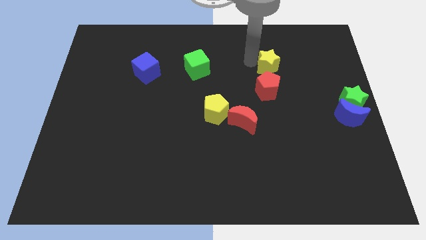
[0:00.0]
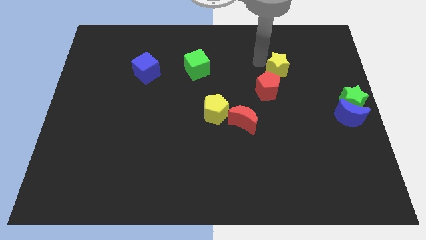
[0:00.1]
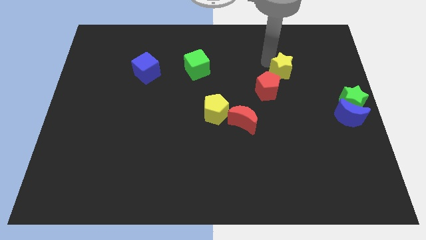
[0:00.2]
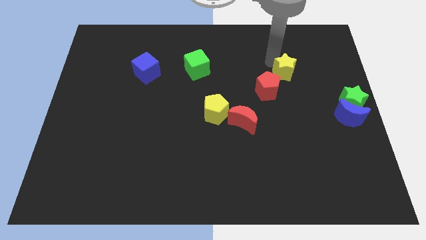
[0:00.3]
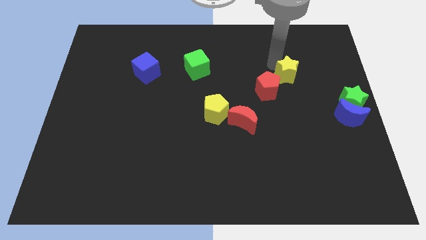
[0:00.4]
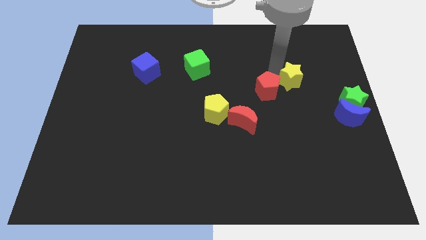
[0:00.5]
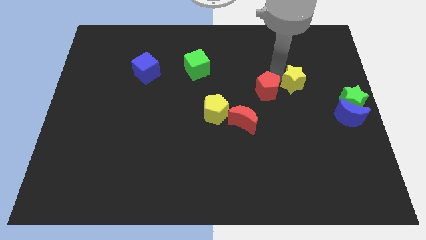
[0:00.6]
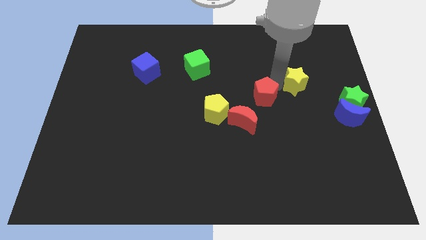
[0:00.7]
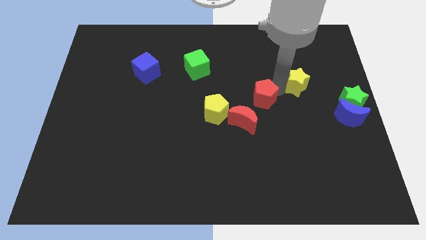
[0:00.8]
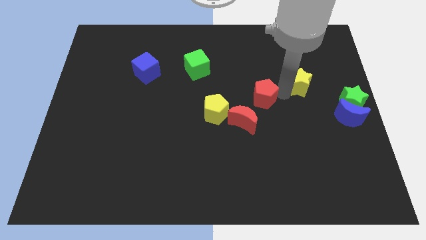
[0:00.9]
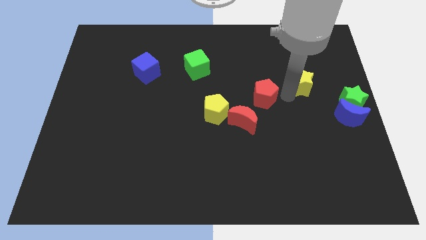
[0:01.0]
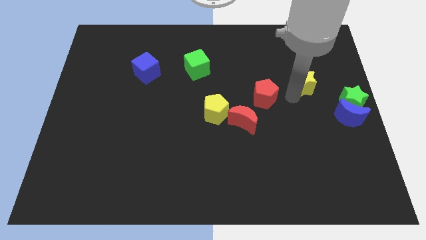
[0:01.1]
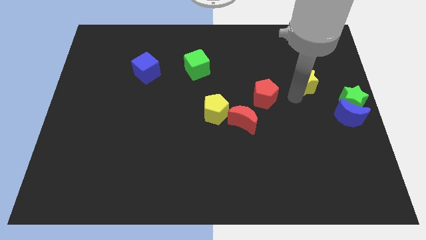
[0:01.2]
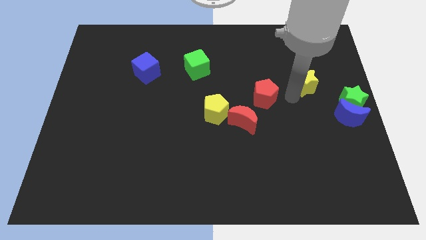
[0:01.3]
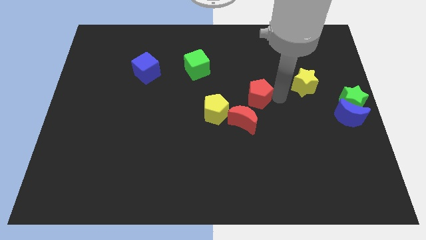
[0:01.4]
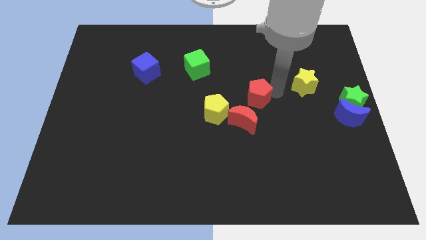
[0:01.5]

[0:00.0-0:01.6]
slide the yellow star diagonally top right to the red pentagon

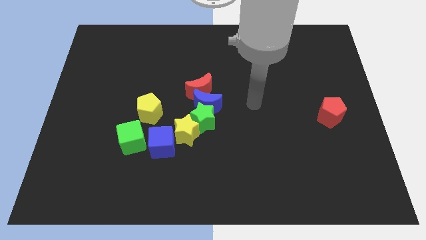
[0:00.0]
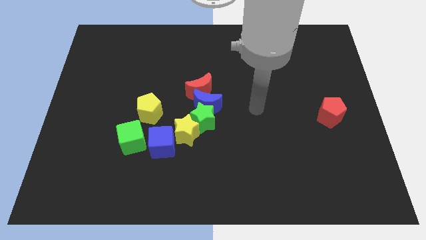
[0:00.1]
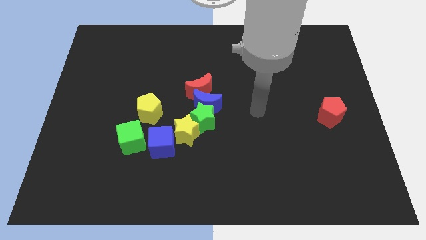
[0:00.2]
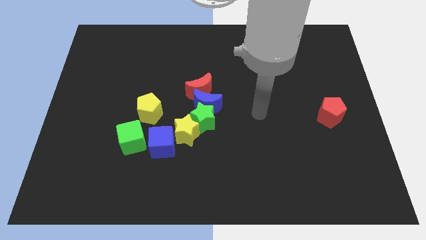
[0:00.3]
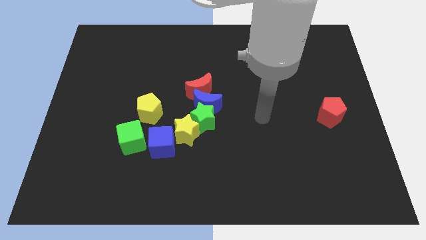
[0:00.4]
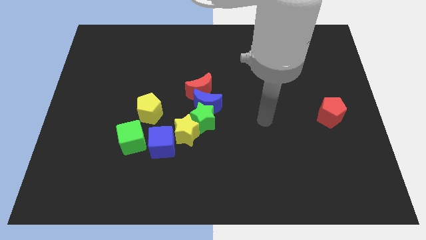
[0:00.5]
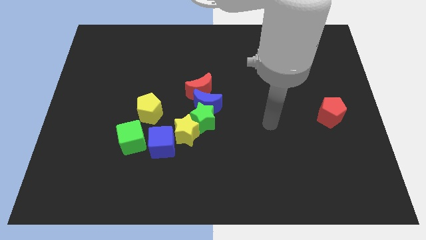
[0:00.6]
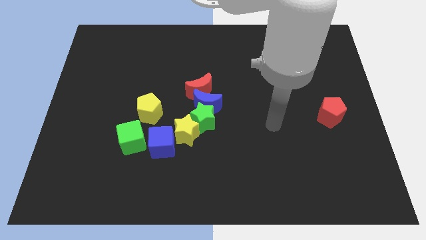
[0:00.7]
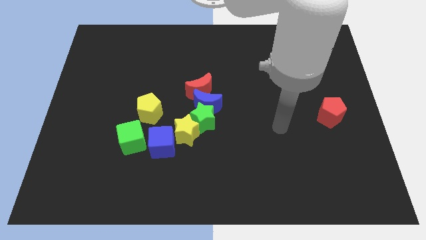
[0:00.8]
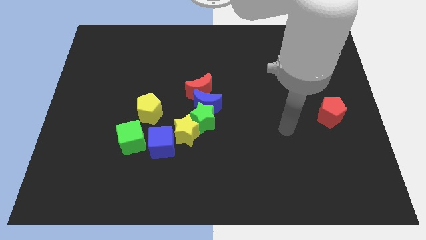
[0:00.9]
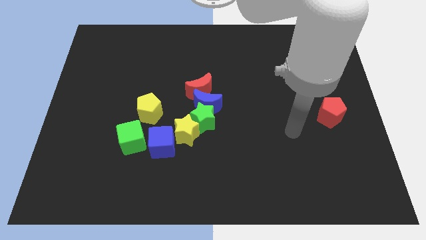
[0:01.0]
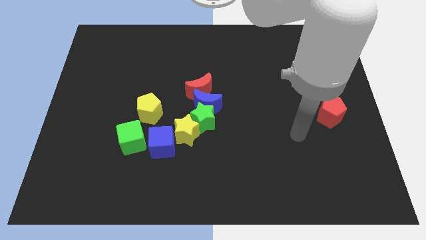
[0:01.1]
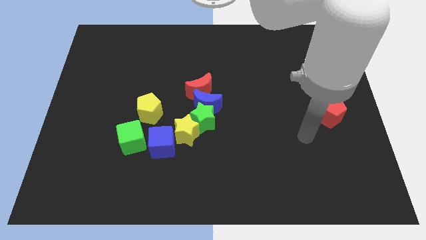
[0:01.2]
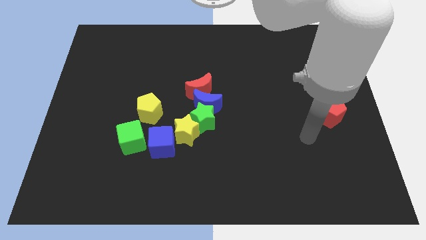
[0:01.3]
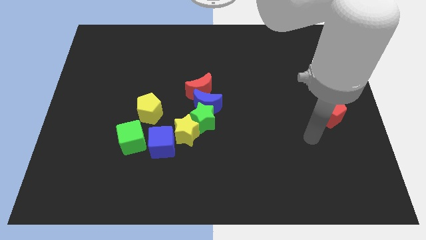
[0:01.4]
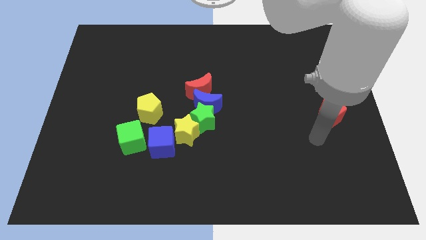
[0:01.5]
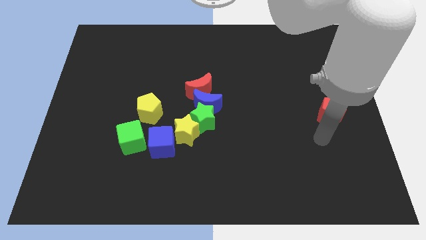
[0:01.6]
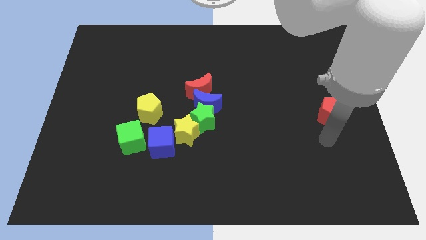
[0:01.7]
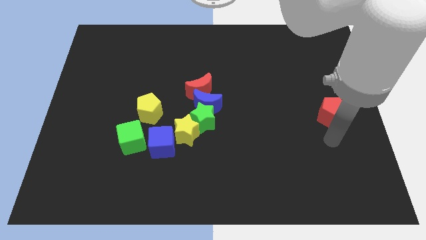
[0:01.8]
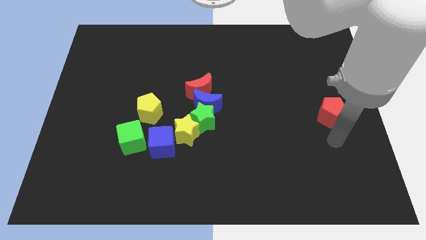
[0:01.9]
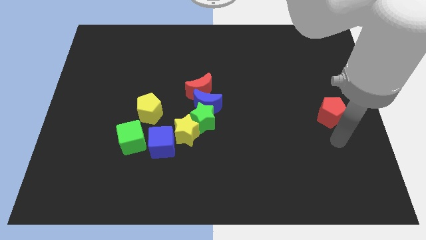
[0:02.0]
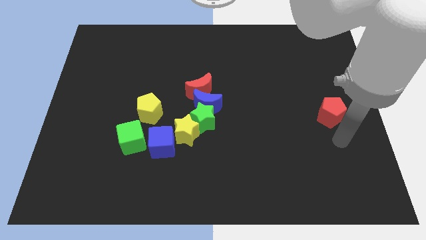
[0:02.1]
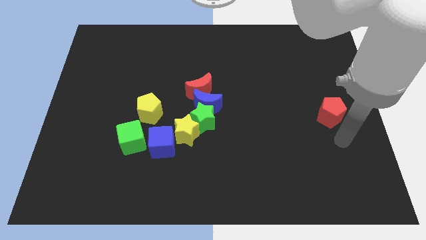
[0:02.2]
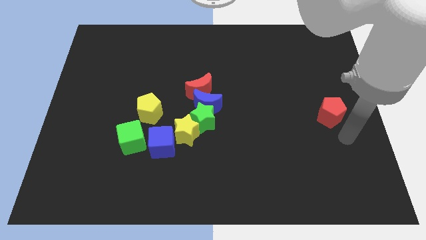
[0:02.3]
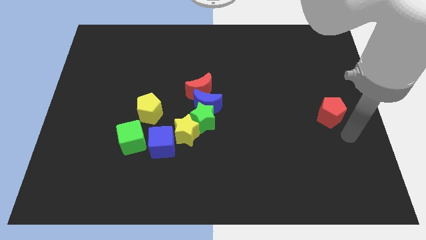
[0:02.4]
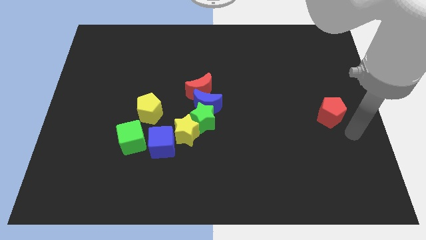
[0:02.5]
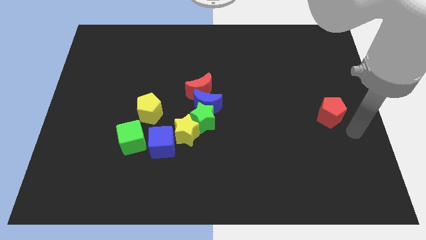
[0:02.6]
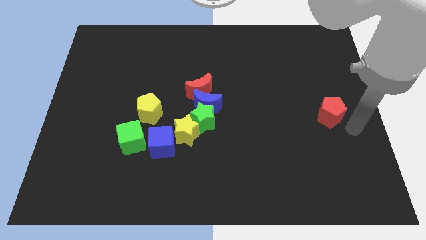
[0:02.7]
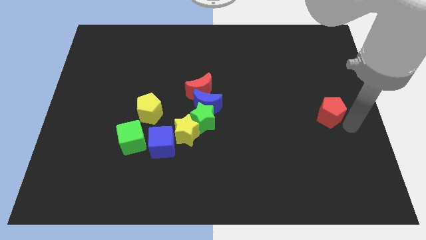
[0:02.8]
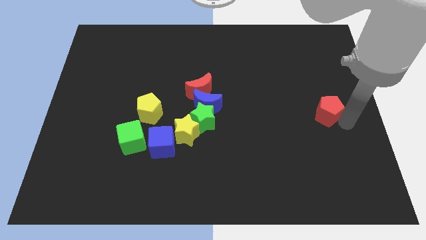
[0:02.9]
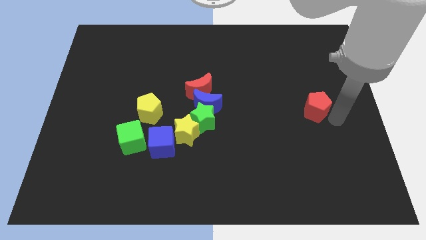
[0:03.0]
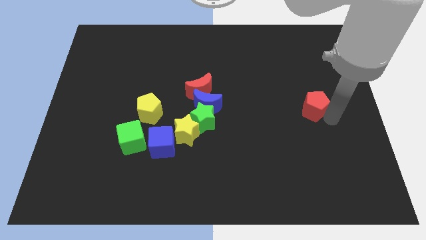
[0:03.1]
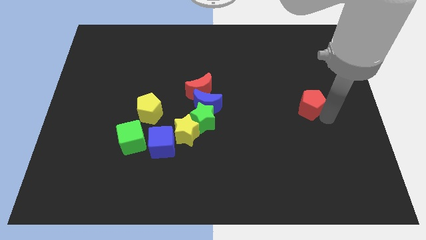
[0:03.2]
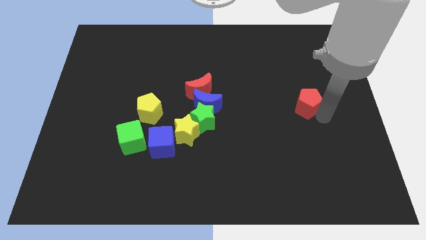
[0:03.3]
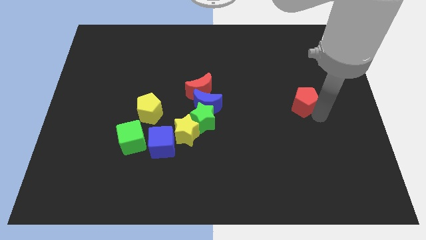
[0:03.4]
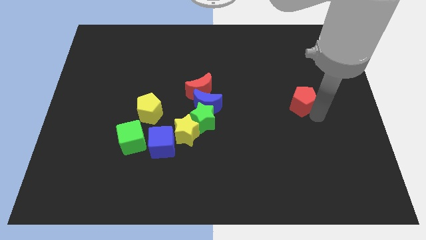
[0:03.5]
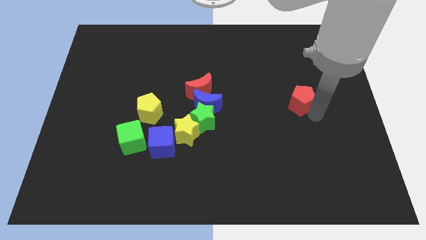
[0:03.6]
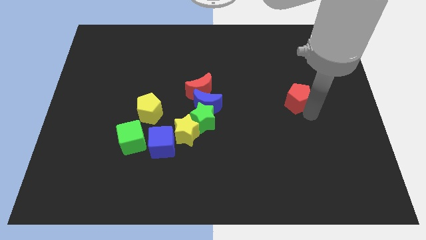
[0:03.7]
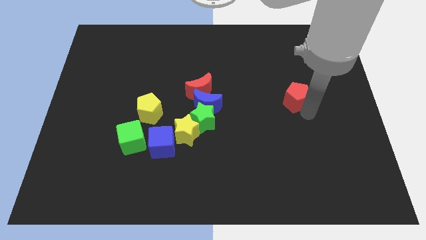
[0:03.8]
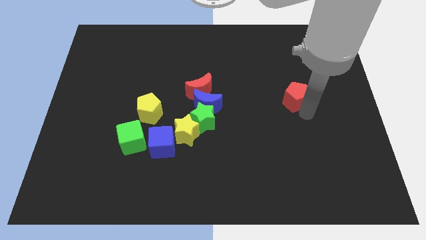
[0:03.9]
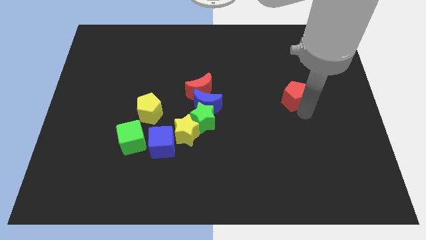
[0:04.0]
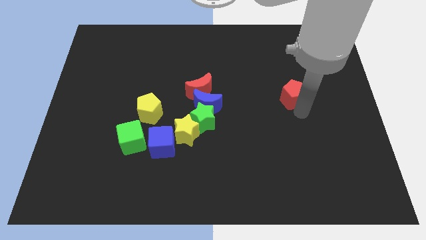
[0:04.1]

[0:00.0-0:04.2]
move the red pentagon horizontally right to the blue moon

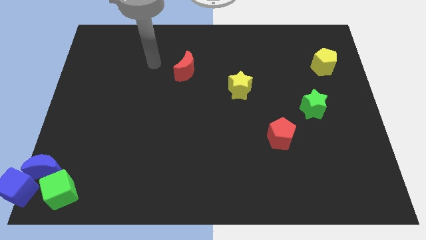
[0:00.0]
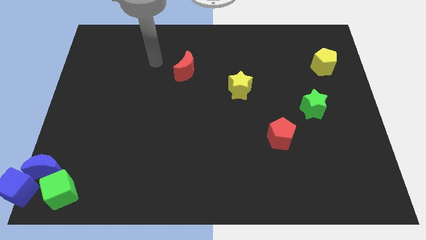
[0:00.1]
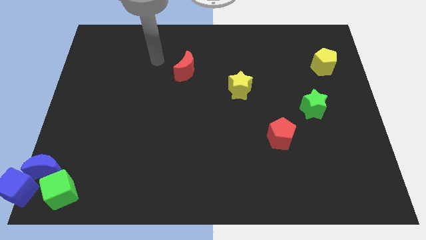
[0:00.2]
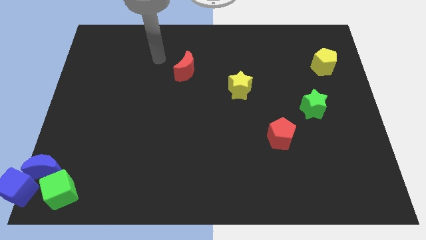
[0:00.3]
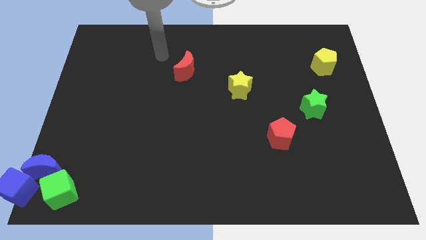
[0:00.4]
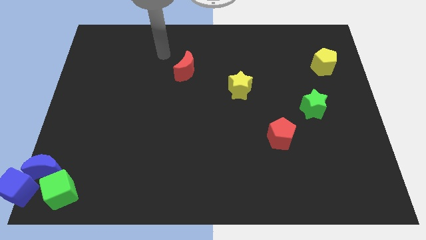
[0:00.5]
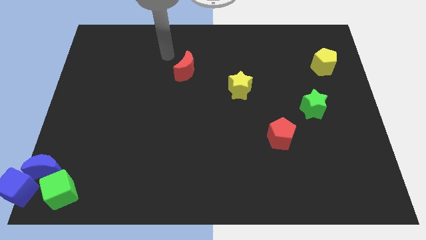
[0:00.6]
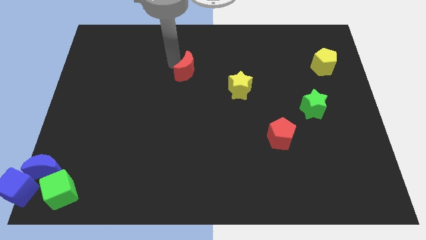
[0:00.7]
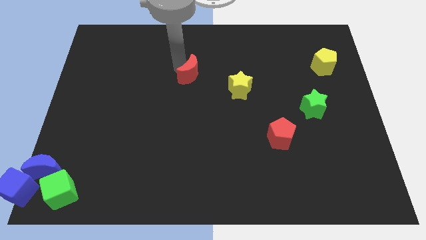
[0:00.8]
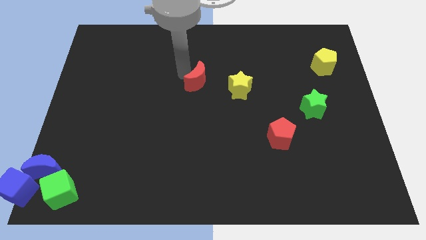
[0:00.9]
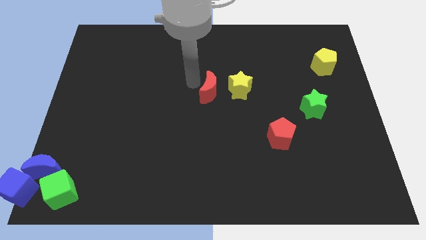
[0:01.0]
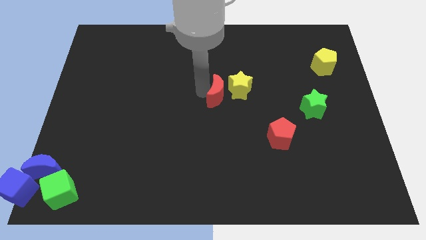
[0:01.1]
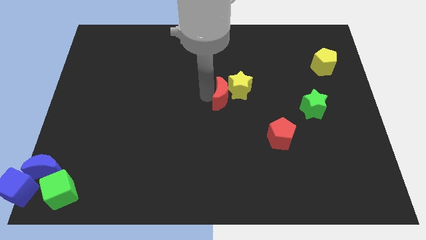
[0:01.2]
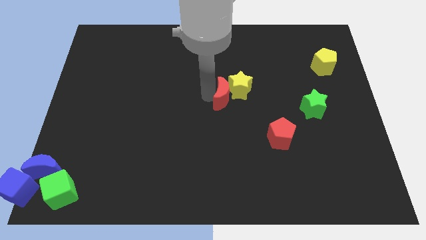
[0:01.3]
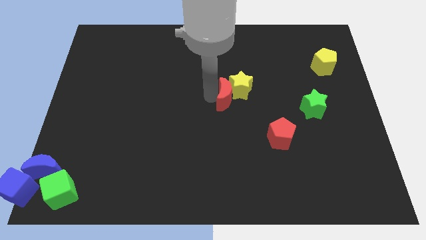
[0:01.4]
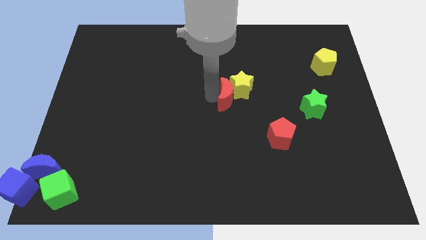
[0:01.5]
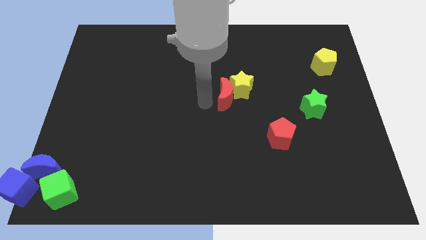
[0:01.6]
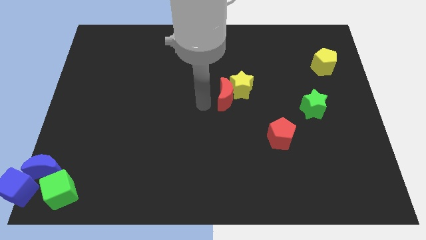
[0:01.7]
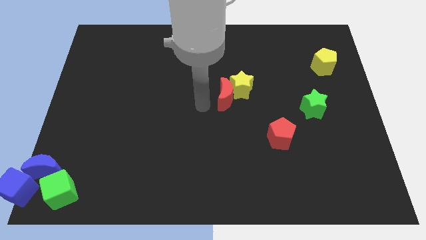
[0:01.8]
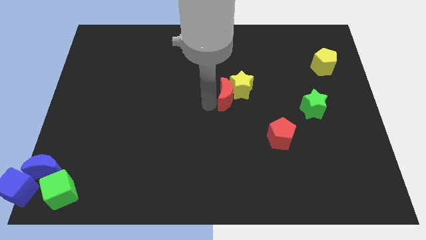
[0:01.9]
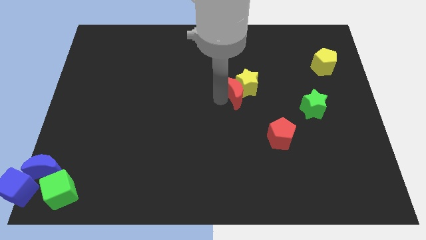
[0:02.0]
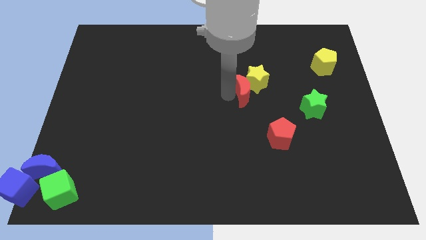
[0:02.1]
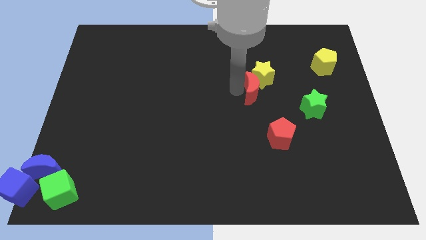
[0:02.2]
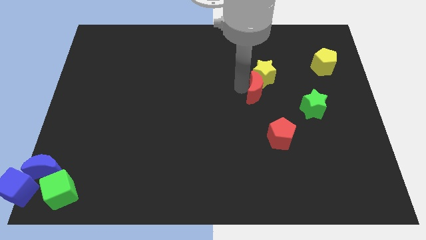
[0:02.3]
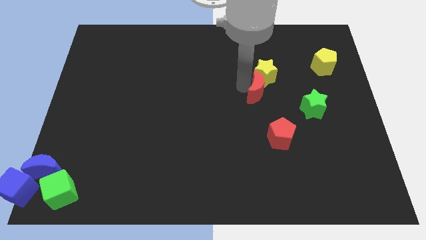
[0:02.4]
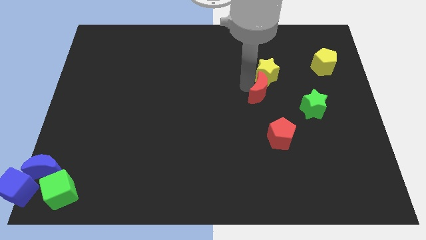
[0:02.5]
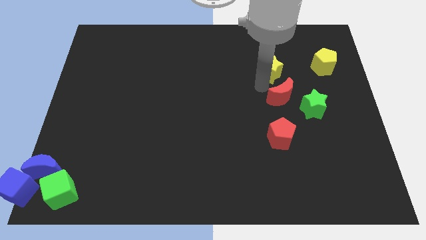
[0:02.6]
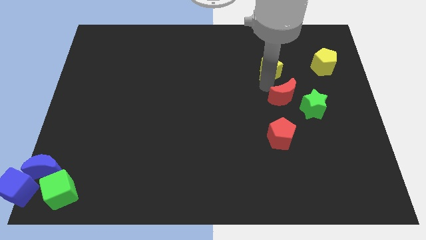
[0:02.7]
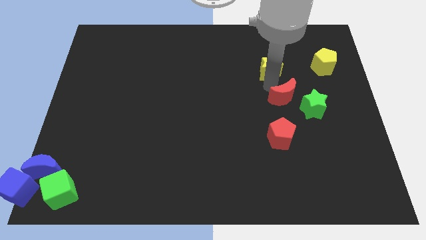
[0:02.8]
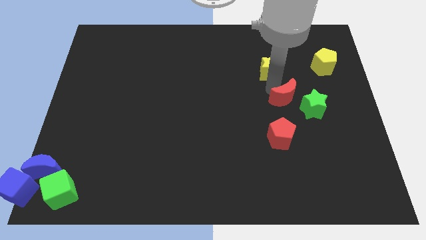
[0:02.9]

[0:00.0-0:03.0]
move the red moon with yellow star together and separate them

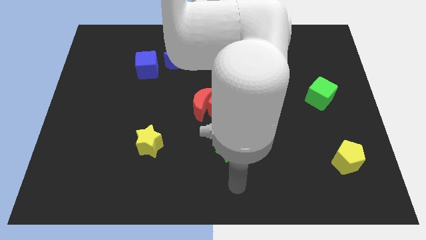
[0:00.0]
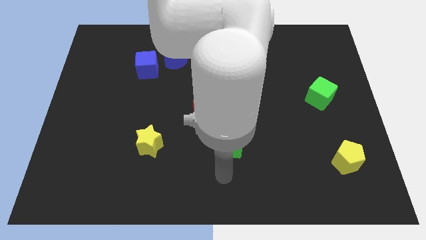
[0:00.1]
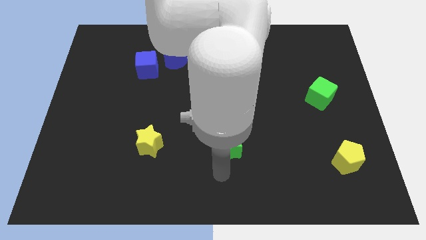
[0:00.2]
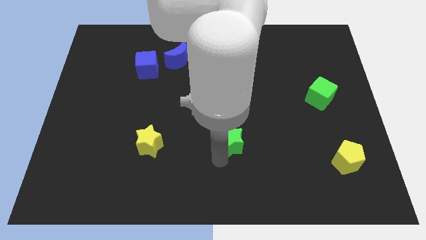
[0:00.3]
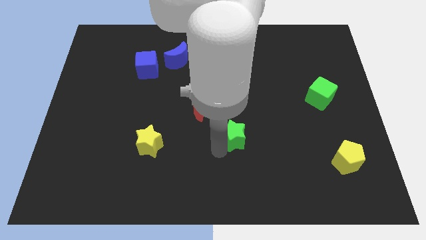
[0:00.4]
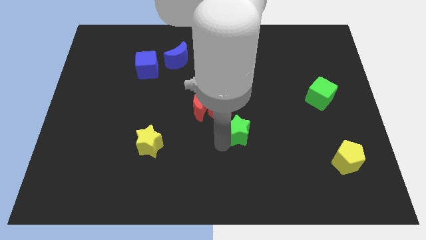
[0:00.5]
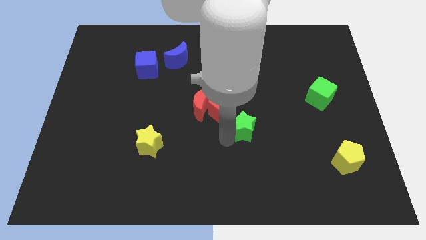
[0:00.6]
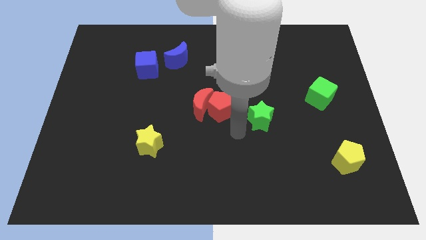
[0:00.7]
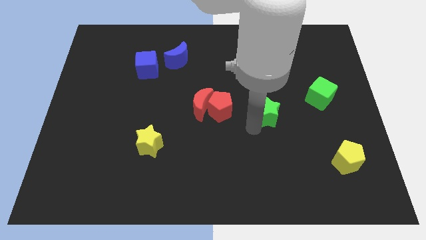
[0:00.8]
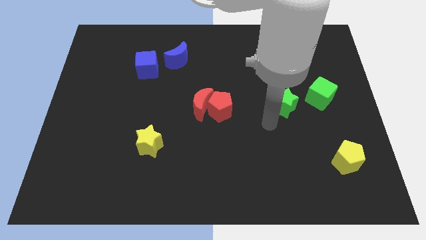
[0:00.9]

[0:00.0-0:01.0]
move the green star to the left of the green cube
